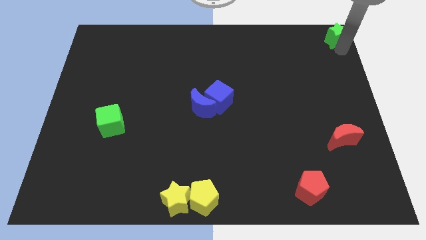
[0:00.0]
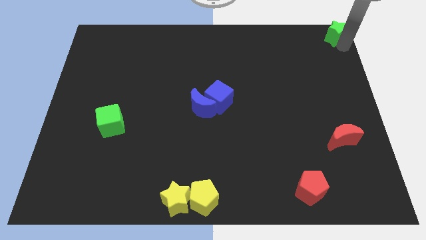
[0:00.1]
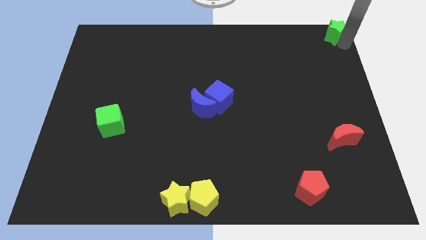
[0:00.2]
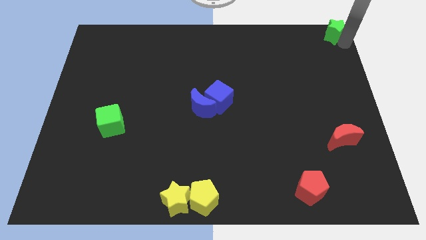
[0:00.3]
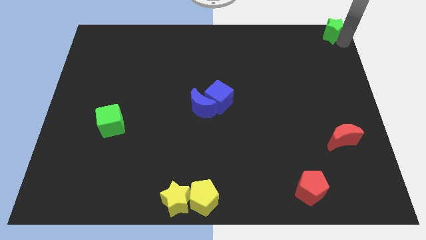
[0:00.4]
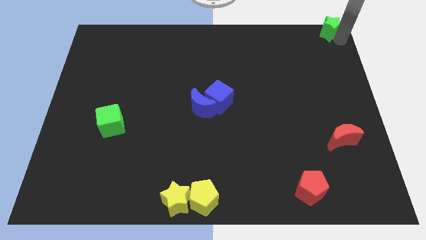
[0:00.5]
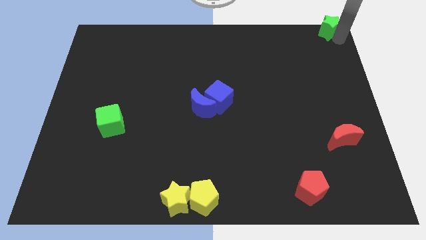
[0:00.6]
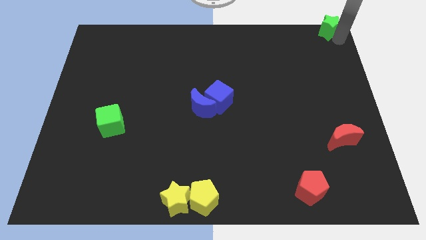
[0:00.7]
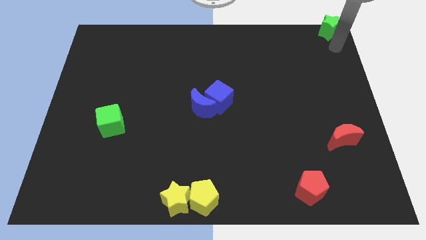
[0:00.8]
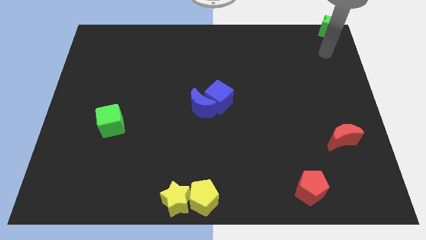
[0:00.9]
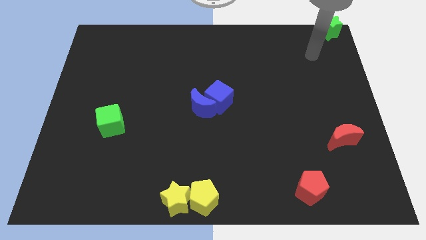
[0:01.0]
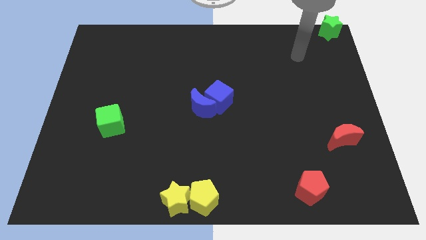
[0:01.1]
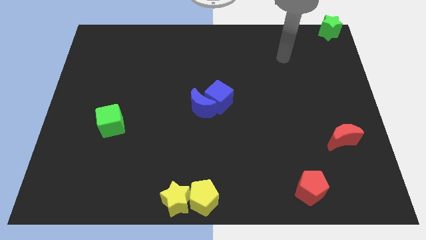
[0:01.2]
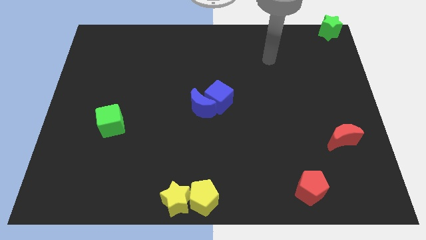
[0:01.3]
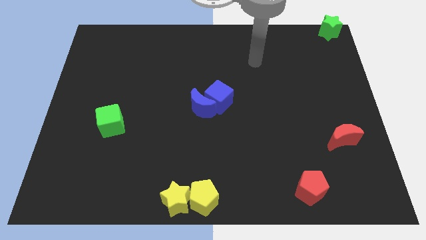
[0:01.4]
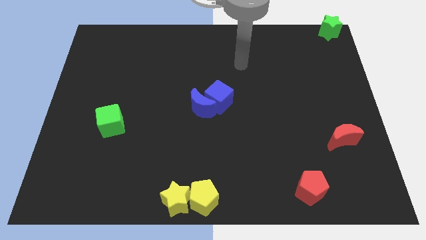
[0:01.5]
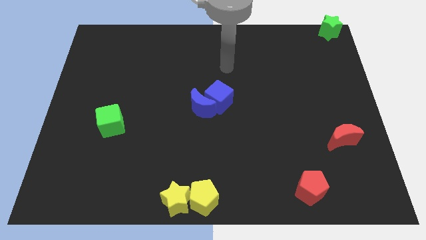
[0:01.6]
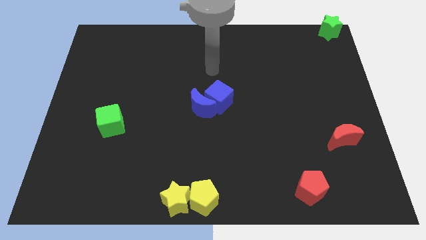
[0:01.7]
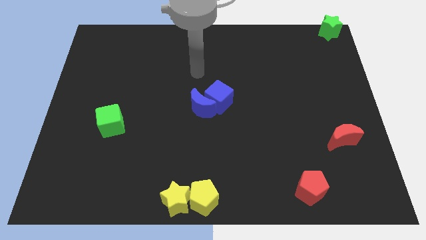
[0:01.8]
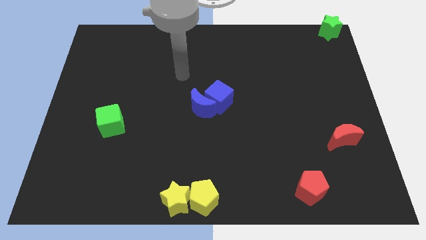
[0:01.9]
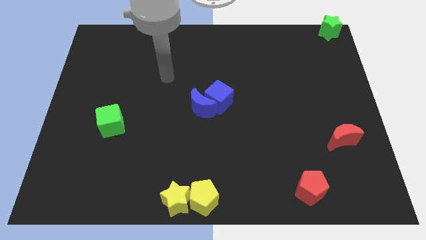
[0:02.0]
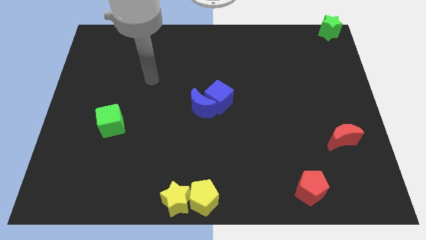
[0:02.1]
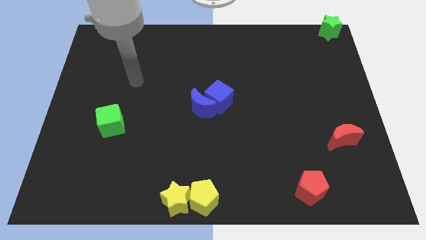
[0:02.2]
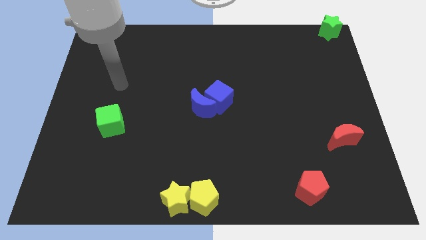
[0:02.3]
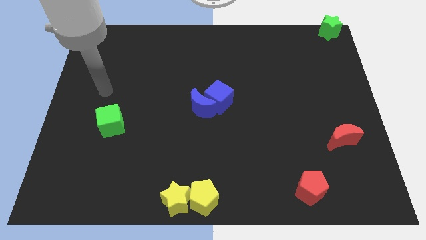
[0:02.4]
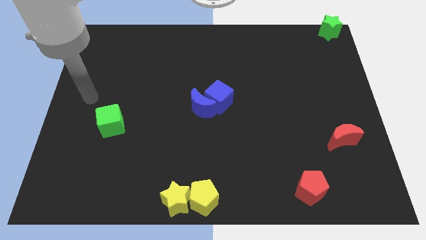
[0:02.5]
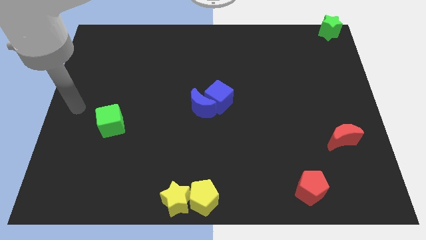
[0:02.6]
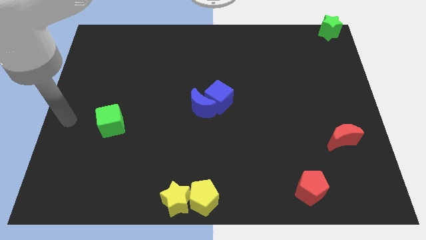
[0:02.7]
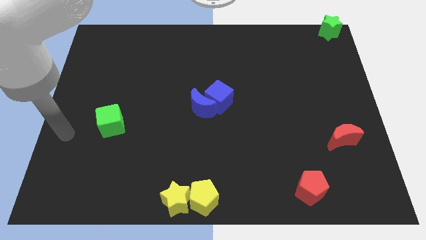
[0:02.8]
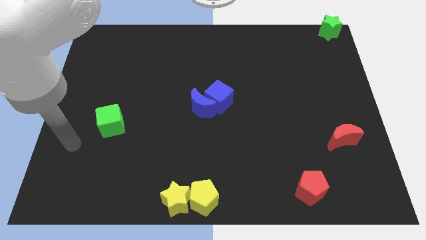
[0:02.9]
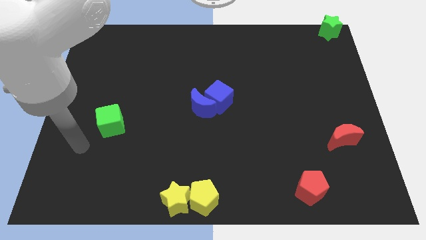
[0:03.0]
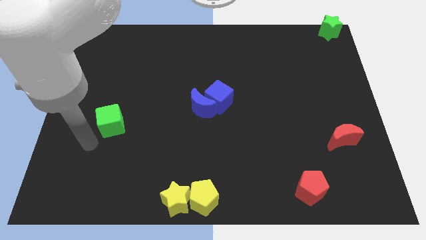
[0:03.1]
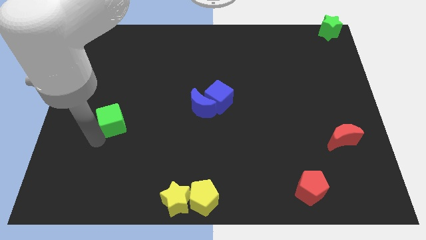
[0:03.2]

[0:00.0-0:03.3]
move the arm to the bottom of the green cube

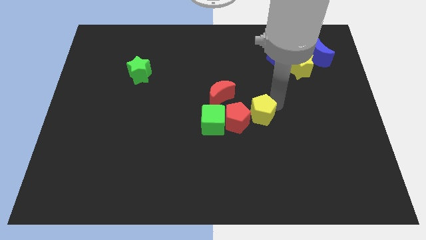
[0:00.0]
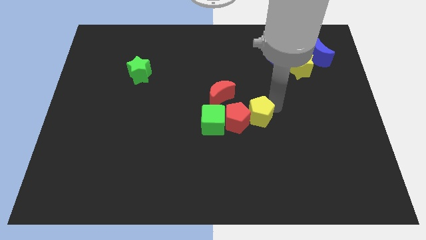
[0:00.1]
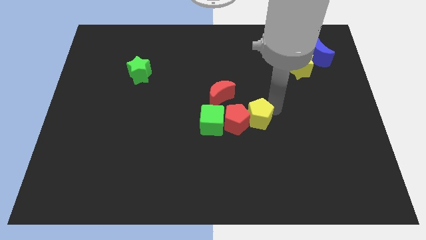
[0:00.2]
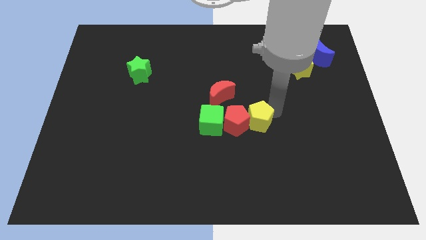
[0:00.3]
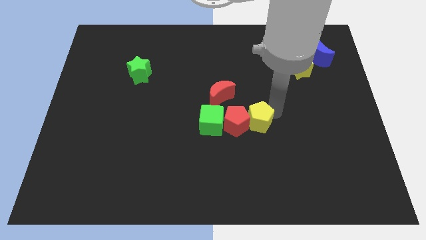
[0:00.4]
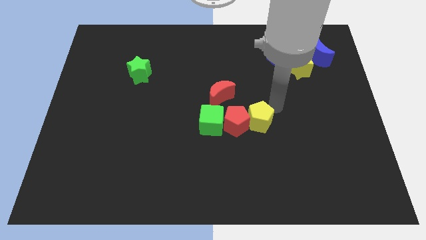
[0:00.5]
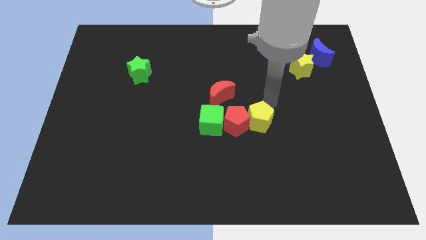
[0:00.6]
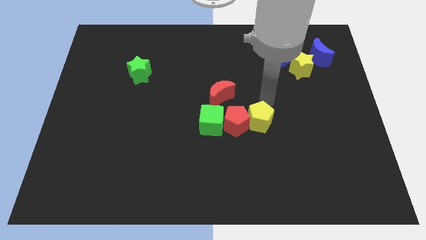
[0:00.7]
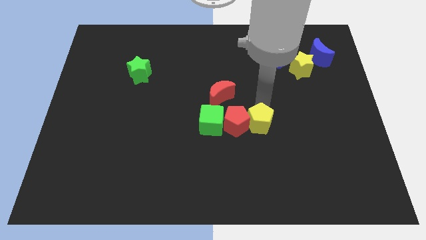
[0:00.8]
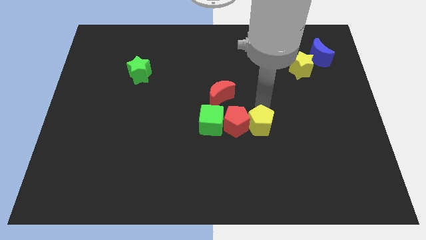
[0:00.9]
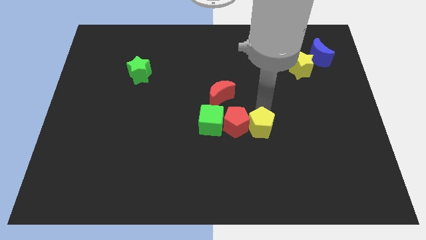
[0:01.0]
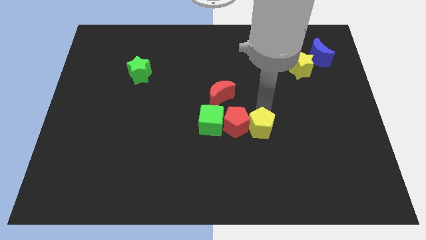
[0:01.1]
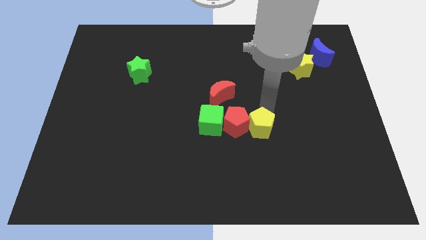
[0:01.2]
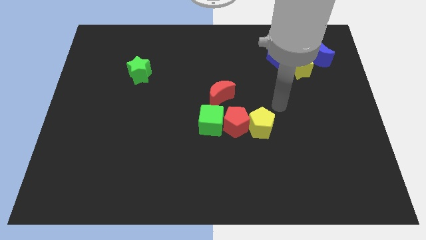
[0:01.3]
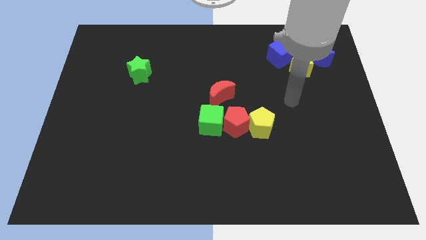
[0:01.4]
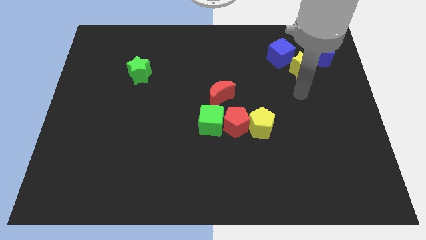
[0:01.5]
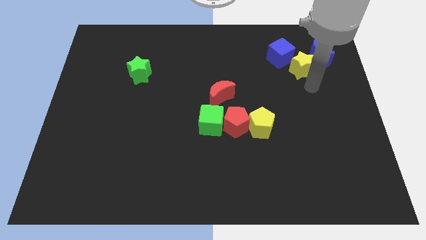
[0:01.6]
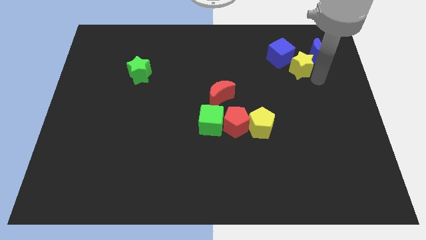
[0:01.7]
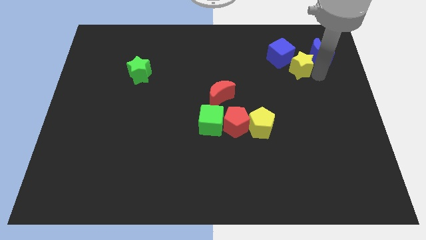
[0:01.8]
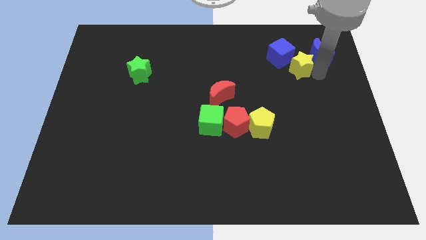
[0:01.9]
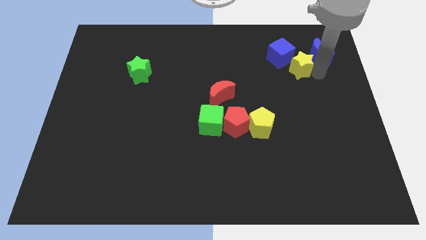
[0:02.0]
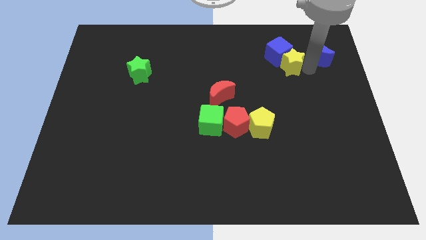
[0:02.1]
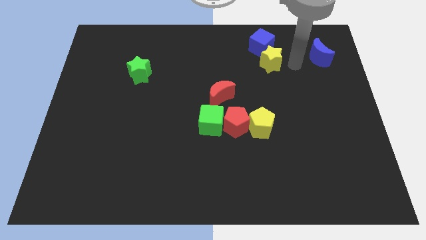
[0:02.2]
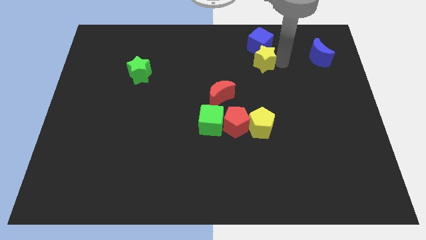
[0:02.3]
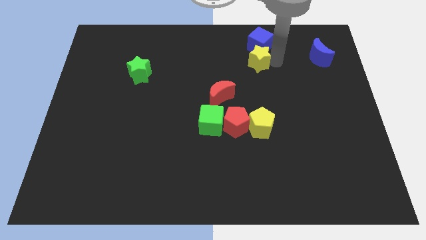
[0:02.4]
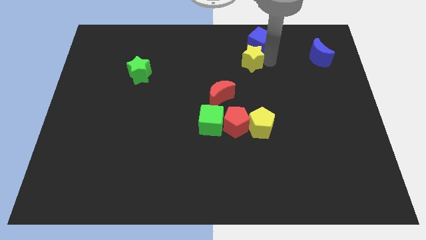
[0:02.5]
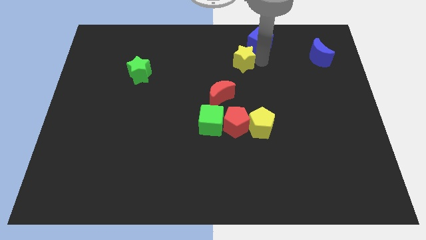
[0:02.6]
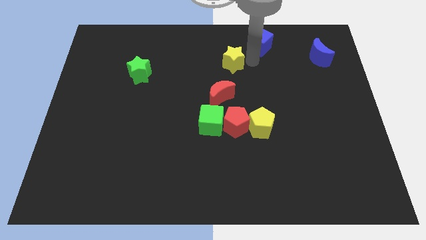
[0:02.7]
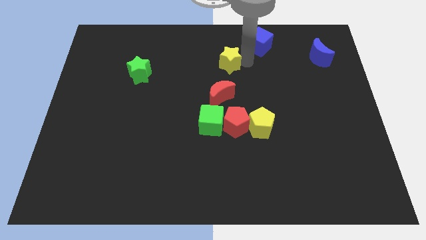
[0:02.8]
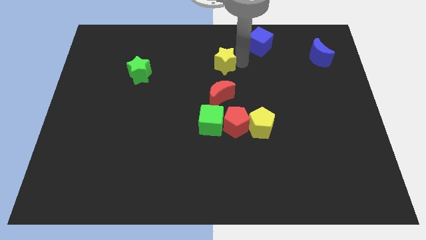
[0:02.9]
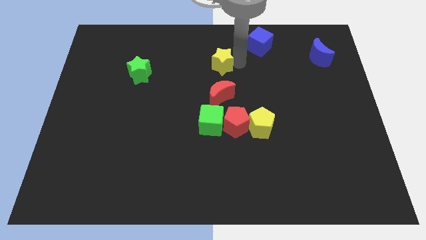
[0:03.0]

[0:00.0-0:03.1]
move the yellow star to the top of the red moon

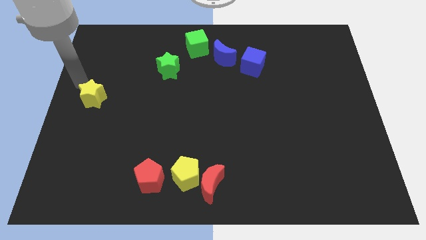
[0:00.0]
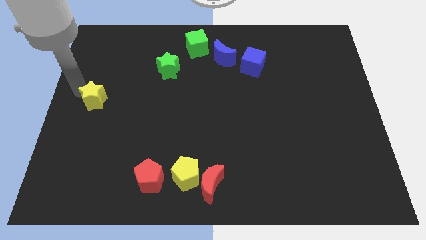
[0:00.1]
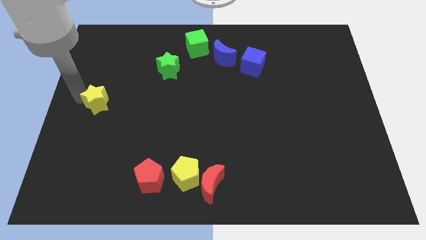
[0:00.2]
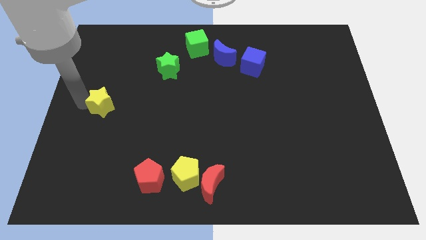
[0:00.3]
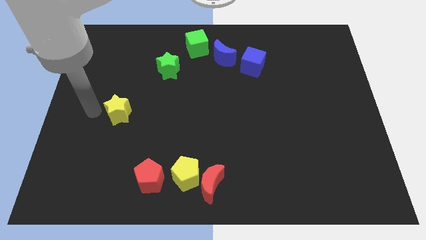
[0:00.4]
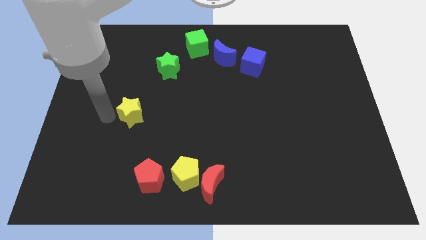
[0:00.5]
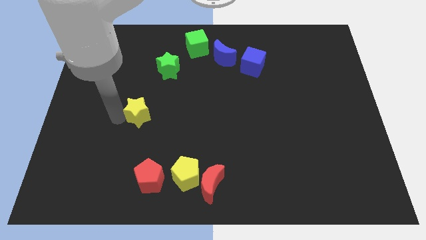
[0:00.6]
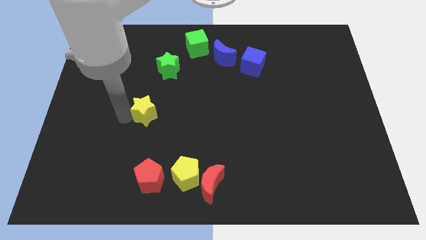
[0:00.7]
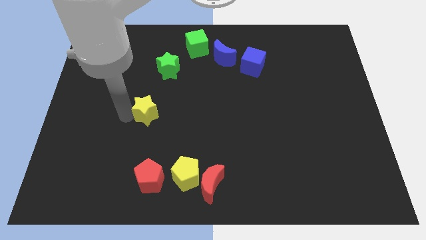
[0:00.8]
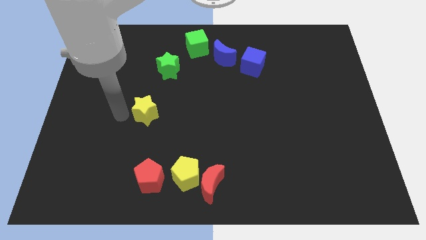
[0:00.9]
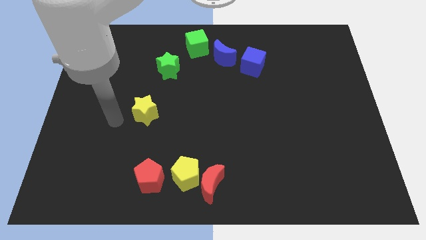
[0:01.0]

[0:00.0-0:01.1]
push the yellow star slightly towards the right

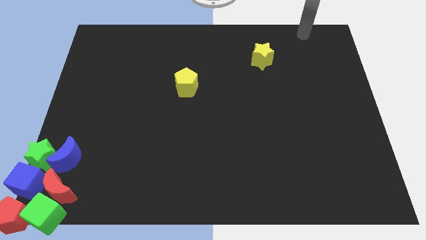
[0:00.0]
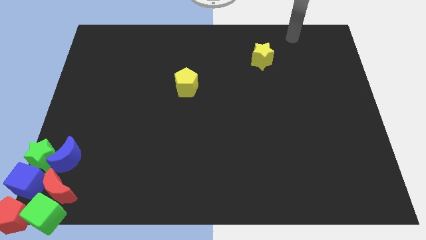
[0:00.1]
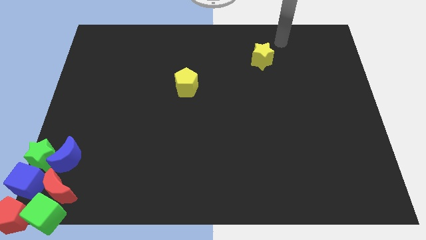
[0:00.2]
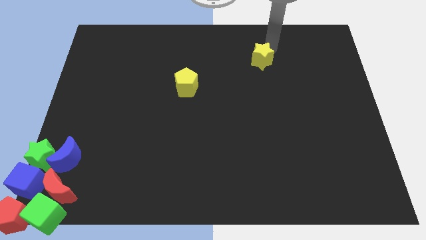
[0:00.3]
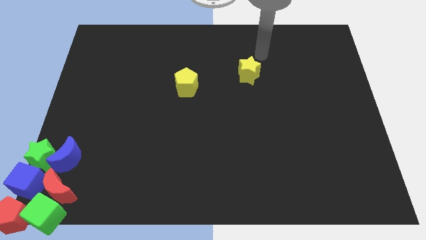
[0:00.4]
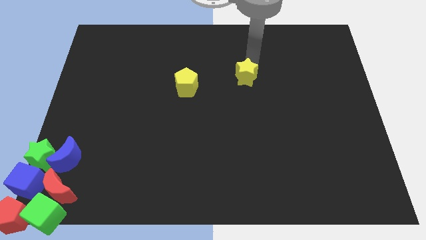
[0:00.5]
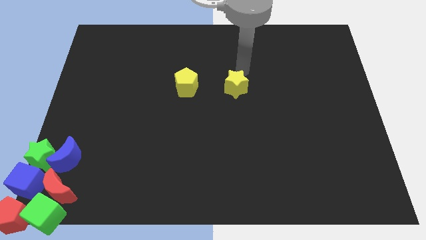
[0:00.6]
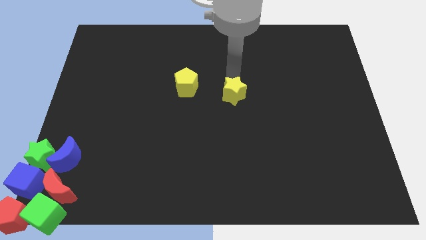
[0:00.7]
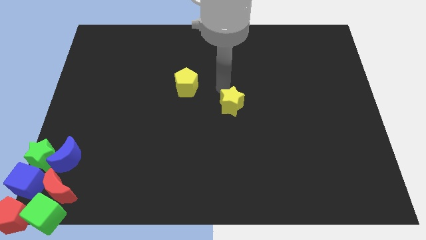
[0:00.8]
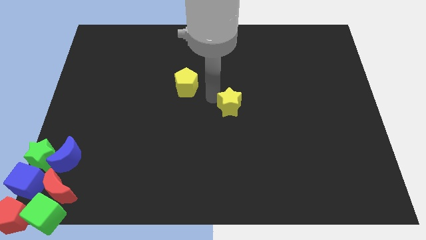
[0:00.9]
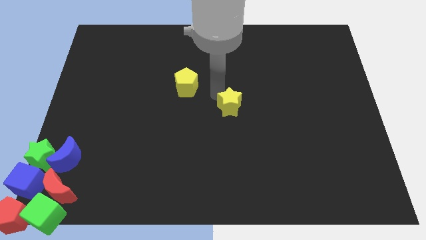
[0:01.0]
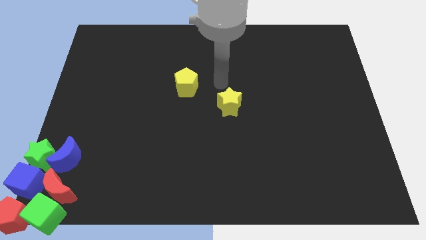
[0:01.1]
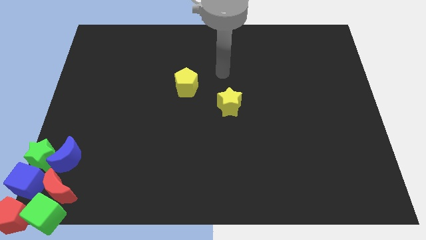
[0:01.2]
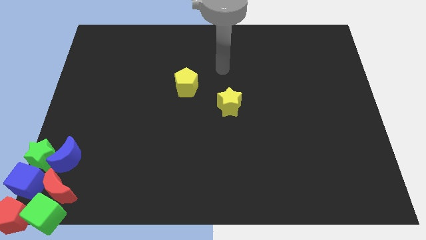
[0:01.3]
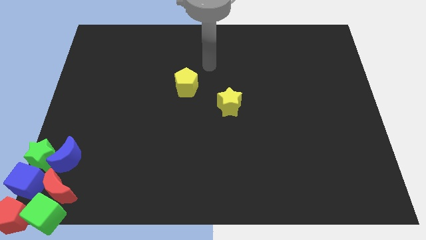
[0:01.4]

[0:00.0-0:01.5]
move the yellow star diagonally bottom right to the yellow pentagon
